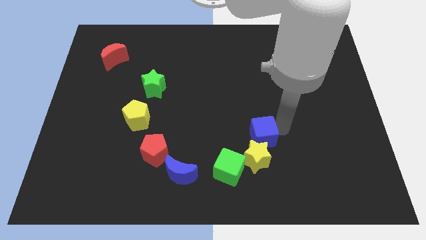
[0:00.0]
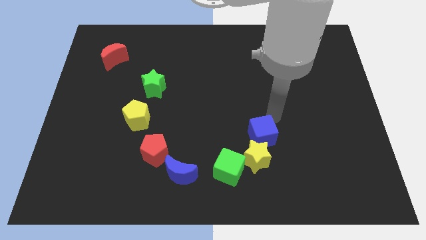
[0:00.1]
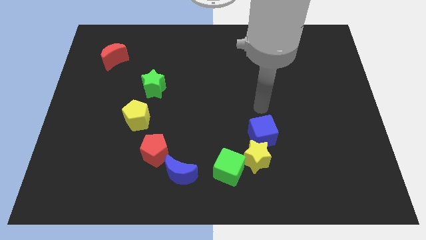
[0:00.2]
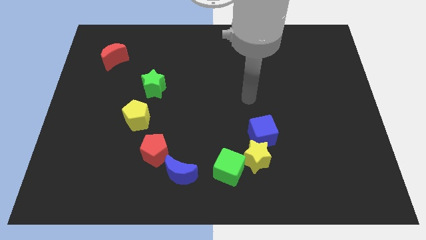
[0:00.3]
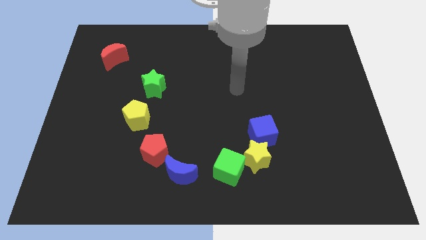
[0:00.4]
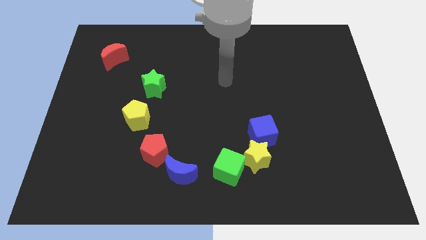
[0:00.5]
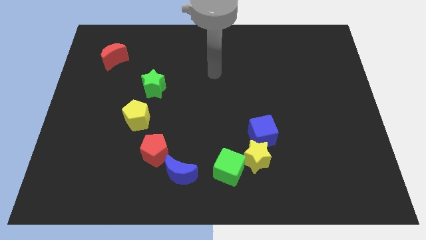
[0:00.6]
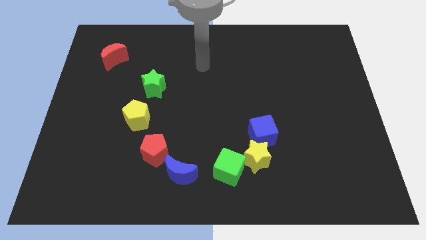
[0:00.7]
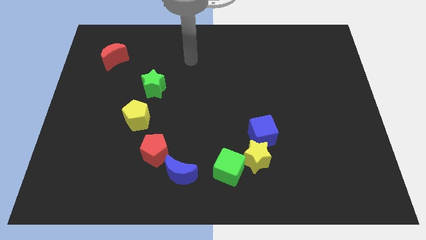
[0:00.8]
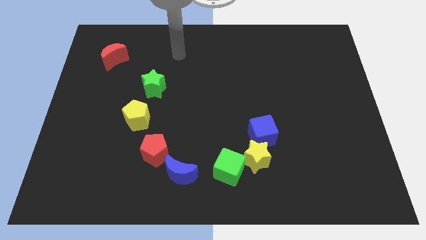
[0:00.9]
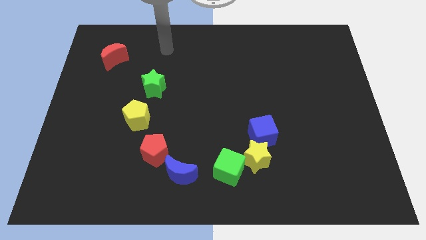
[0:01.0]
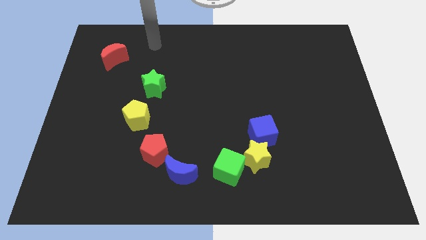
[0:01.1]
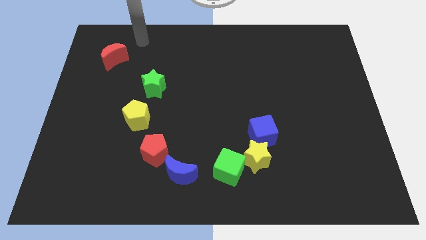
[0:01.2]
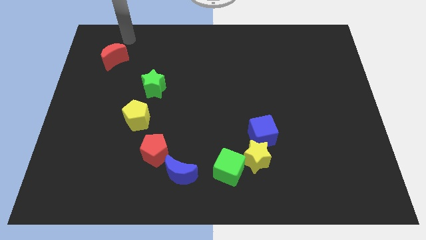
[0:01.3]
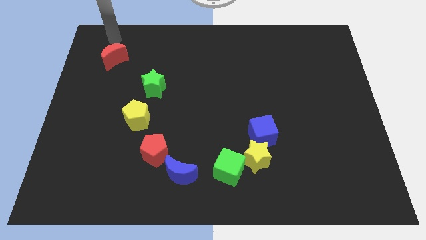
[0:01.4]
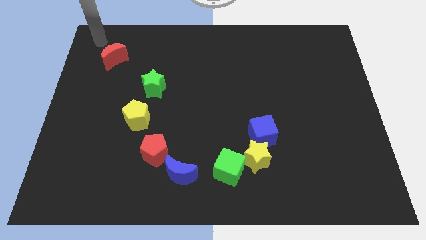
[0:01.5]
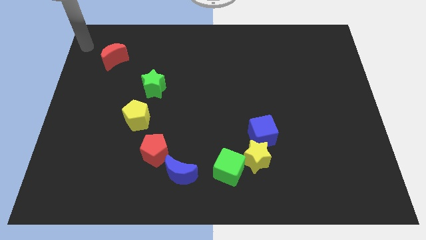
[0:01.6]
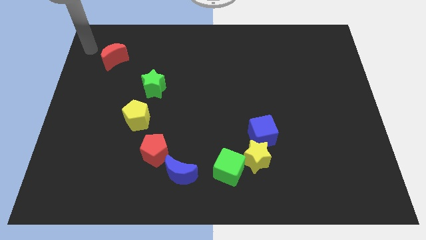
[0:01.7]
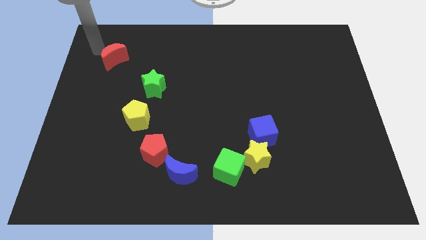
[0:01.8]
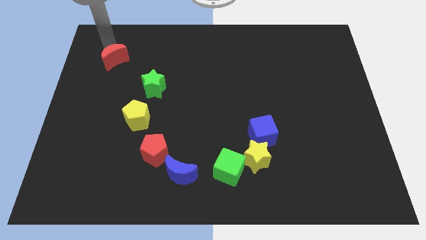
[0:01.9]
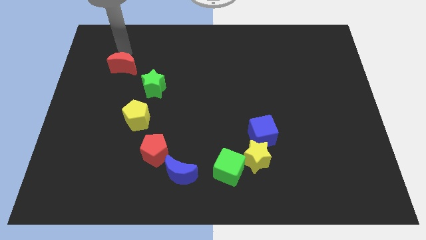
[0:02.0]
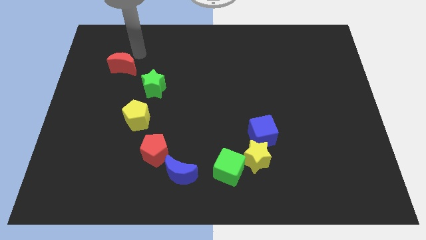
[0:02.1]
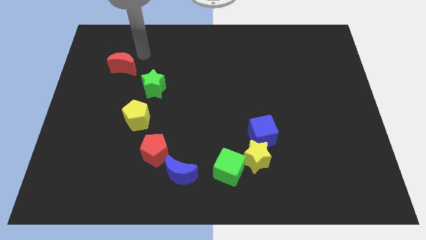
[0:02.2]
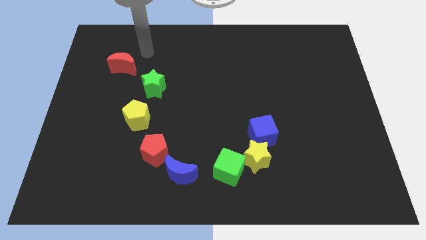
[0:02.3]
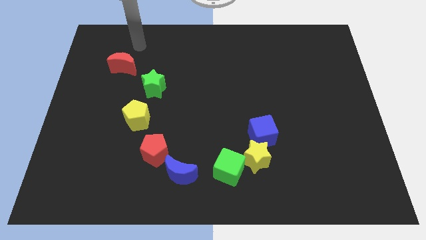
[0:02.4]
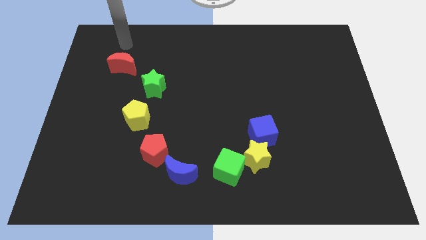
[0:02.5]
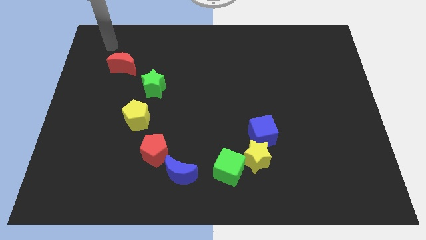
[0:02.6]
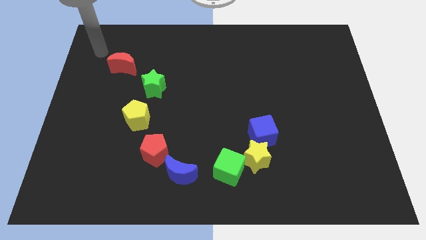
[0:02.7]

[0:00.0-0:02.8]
move your arm away from the blue cube

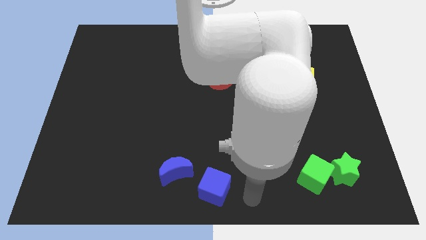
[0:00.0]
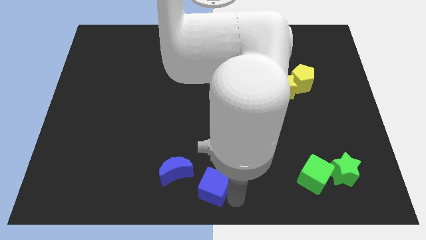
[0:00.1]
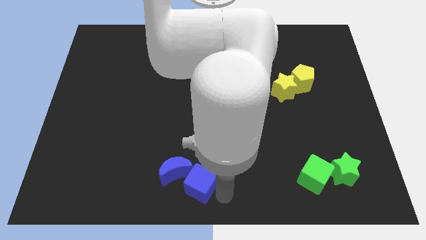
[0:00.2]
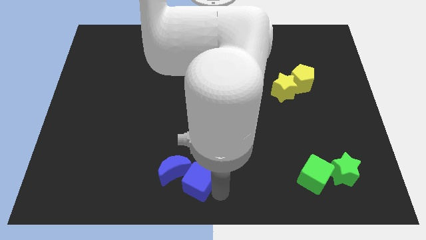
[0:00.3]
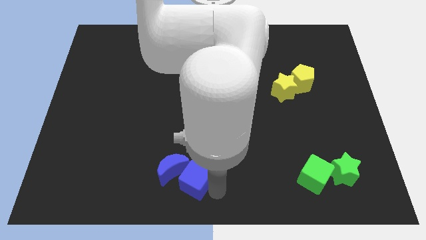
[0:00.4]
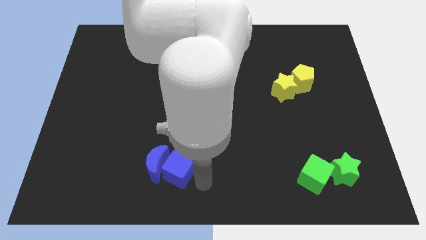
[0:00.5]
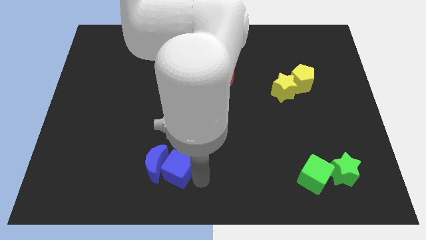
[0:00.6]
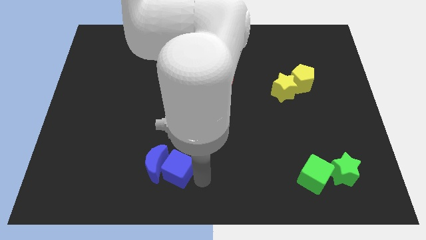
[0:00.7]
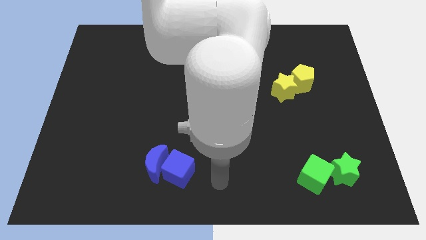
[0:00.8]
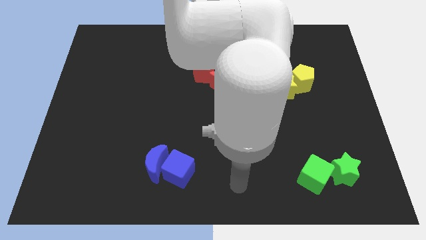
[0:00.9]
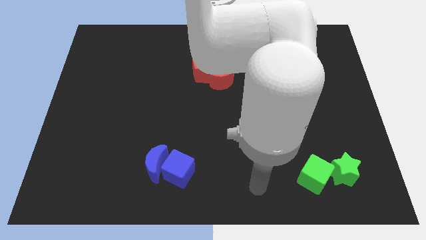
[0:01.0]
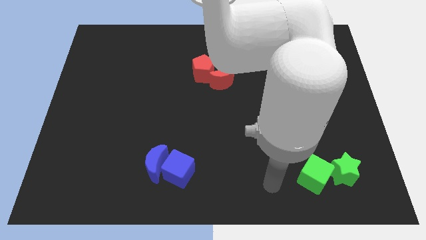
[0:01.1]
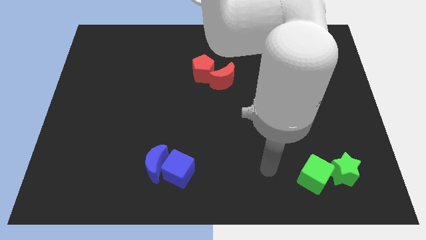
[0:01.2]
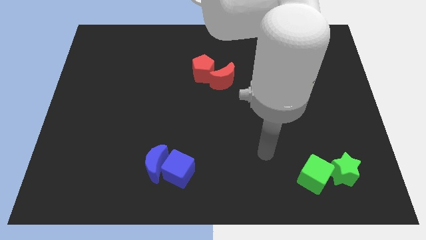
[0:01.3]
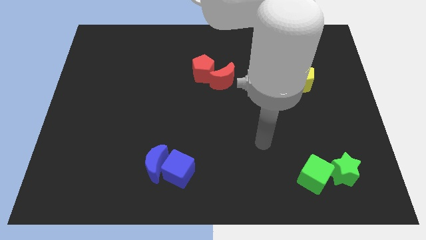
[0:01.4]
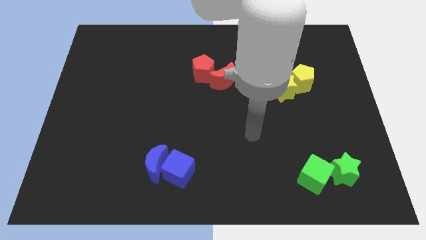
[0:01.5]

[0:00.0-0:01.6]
push the blue cube to the right side of the blue crescent

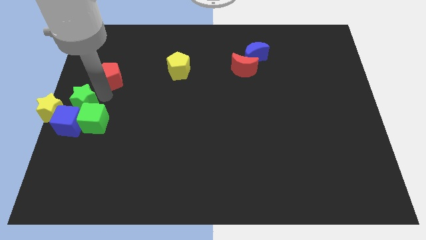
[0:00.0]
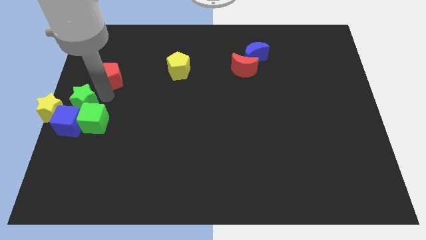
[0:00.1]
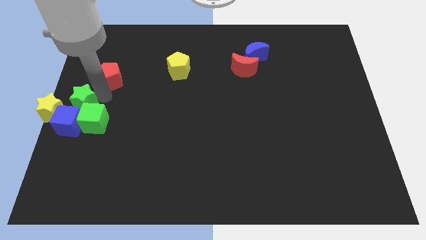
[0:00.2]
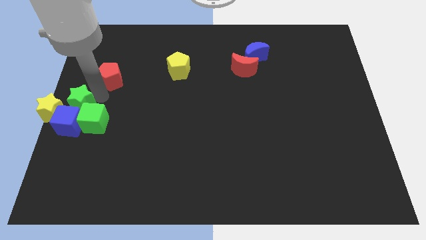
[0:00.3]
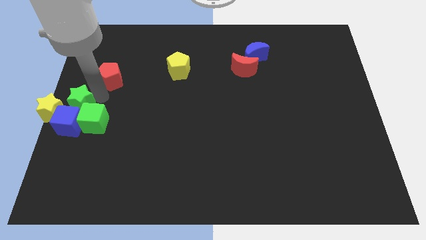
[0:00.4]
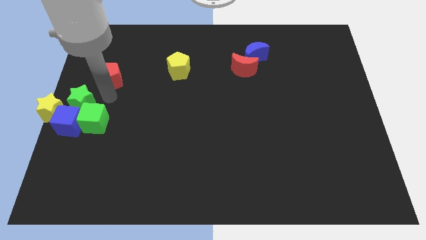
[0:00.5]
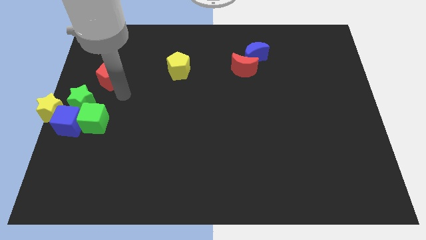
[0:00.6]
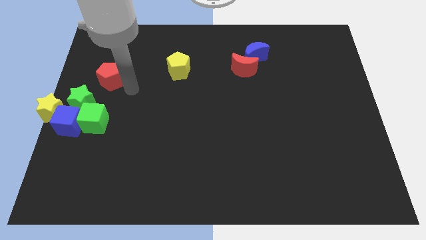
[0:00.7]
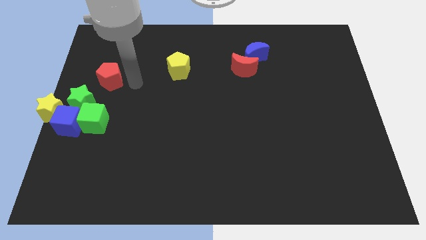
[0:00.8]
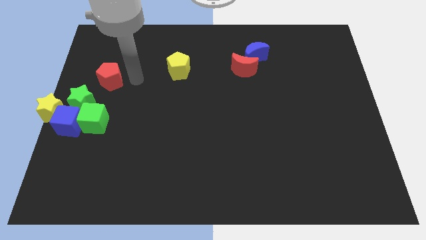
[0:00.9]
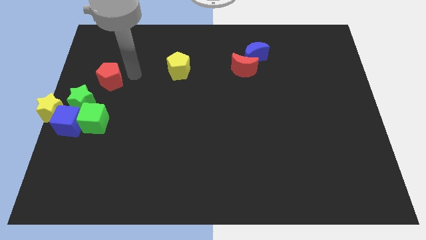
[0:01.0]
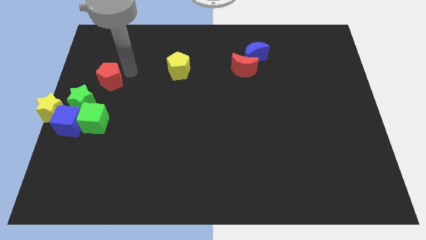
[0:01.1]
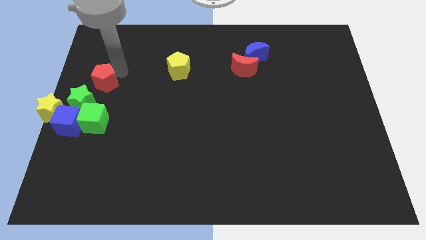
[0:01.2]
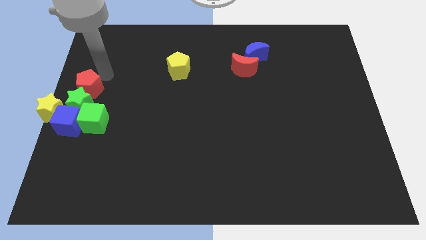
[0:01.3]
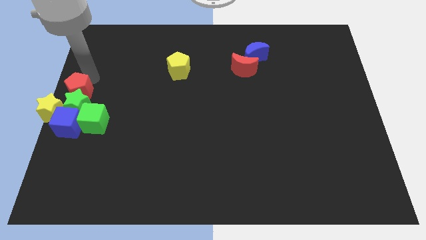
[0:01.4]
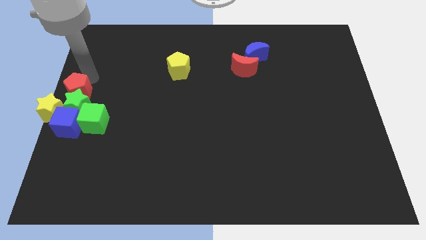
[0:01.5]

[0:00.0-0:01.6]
place the red pentagon at the top of the green star

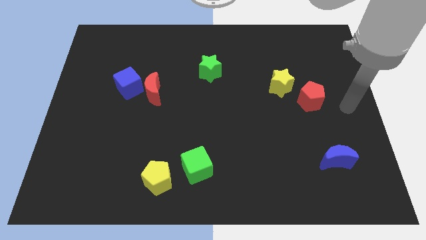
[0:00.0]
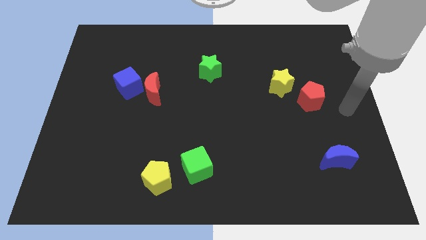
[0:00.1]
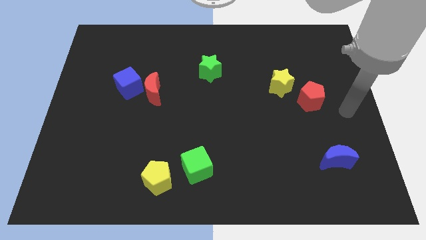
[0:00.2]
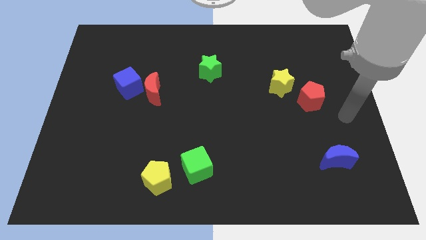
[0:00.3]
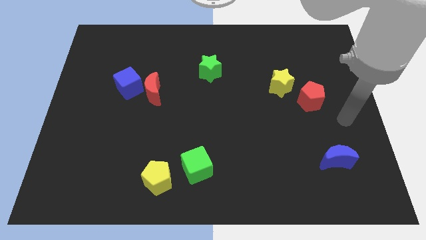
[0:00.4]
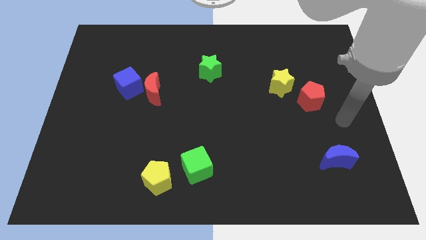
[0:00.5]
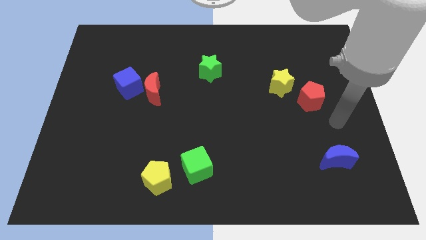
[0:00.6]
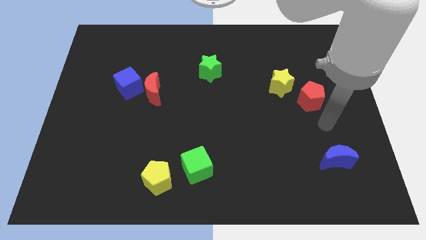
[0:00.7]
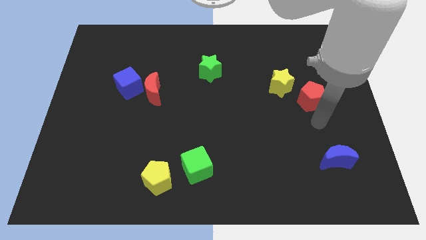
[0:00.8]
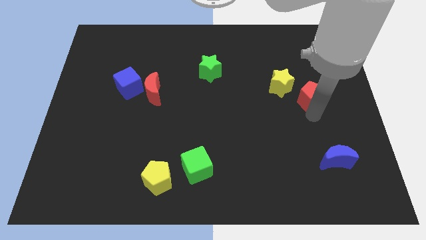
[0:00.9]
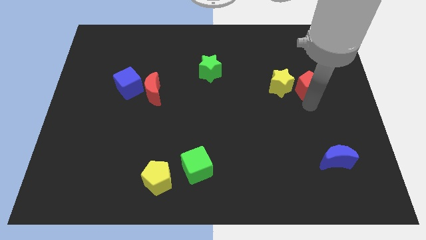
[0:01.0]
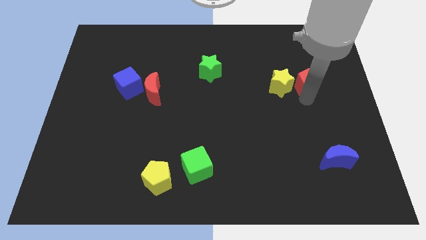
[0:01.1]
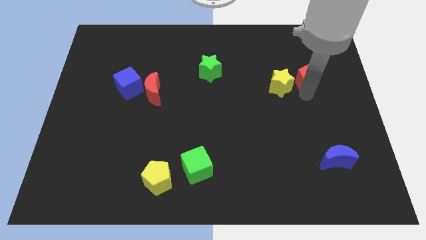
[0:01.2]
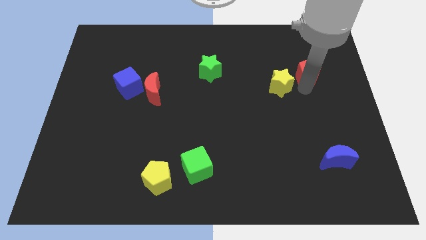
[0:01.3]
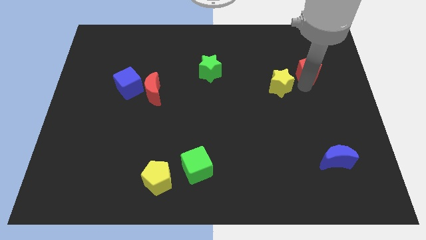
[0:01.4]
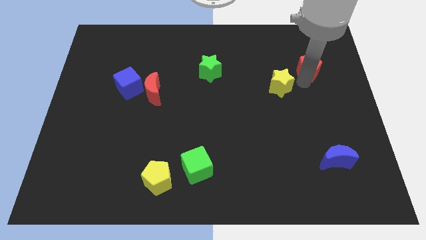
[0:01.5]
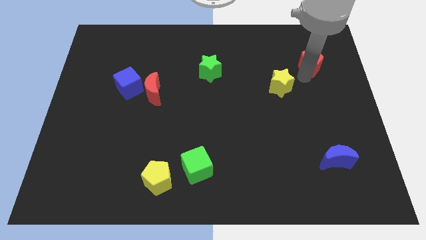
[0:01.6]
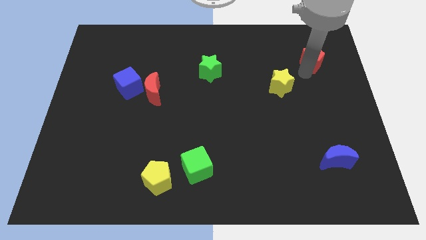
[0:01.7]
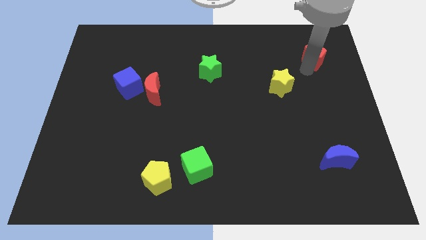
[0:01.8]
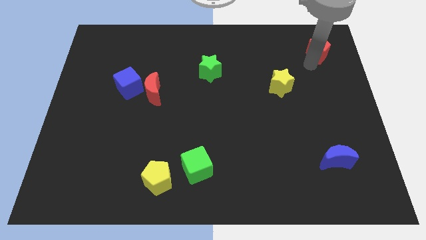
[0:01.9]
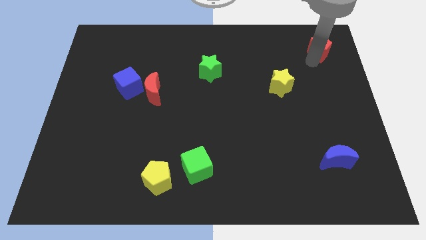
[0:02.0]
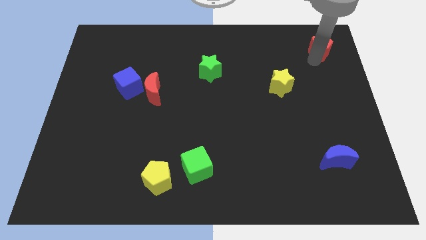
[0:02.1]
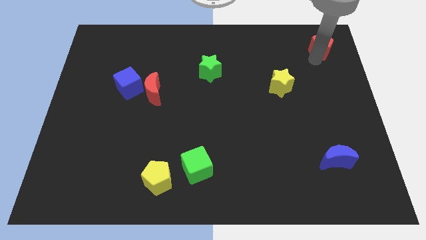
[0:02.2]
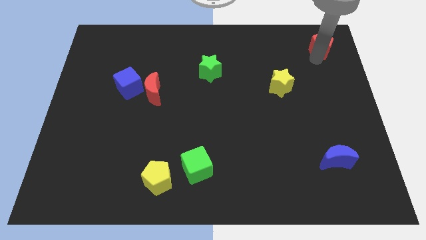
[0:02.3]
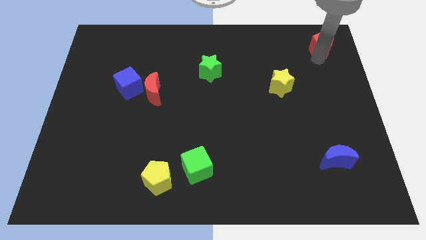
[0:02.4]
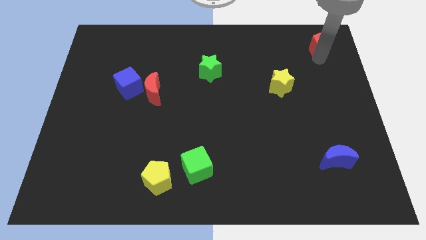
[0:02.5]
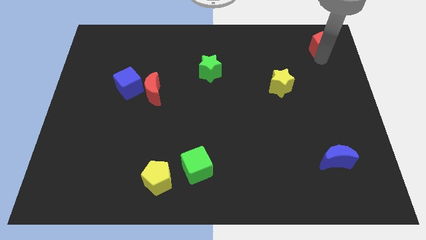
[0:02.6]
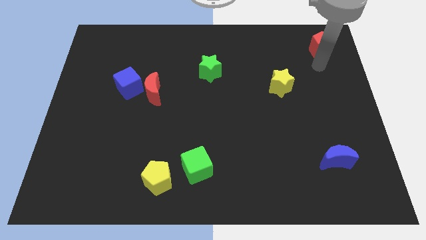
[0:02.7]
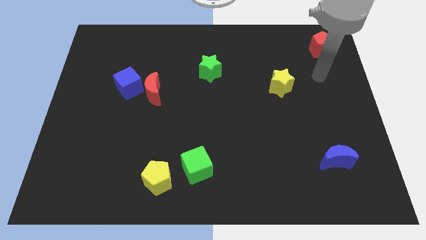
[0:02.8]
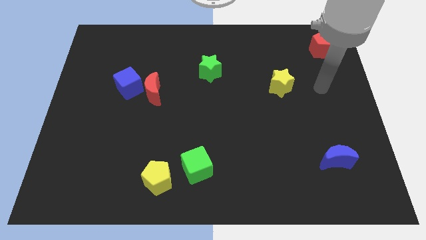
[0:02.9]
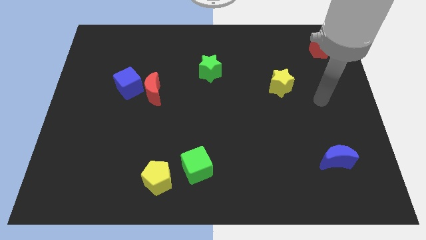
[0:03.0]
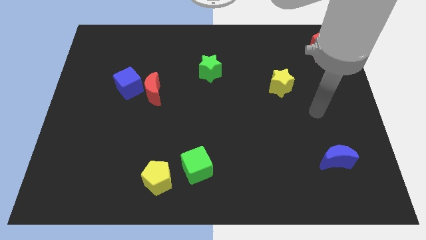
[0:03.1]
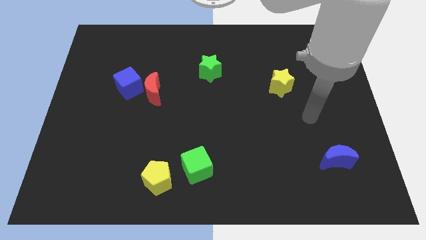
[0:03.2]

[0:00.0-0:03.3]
place the red pentagon diagonally above the top right side of the yellow star
